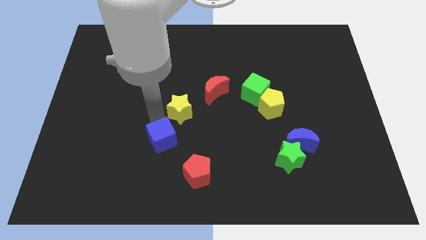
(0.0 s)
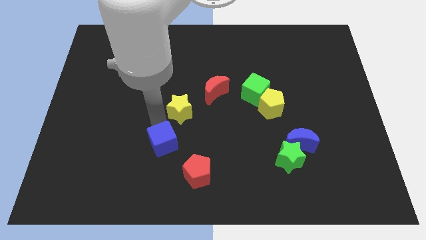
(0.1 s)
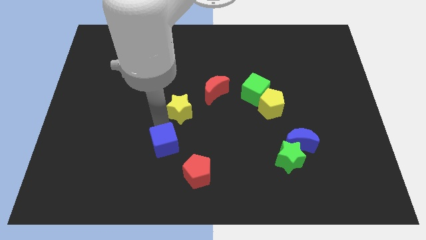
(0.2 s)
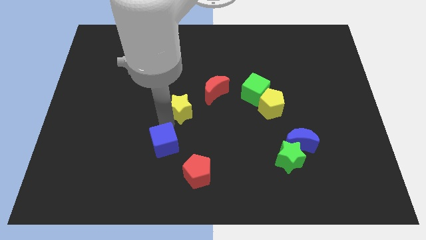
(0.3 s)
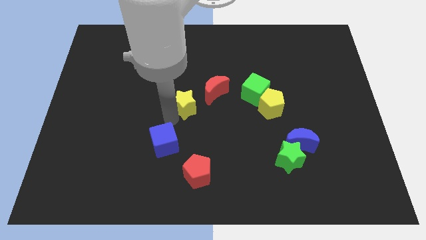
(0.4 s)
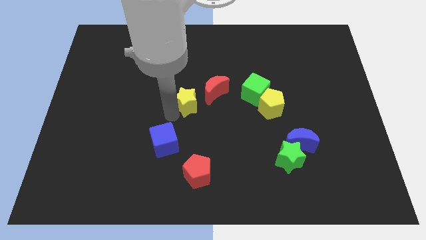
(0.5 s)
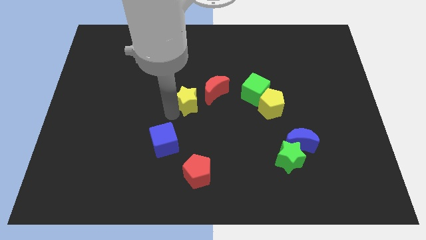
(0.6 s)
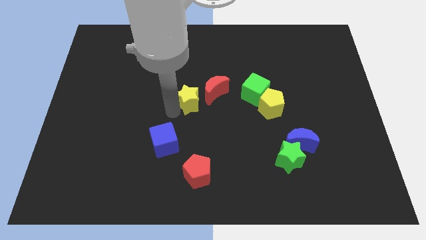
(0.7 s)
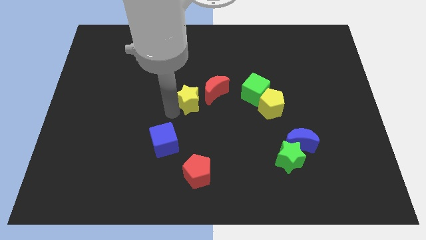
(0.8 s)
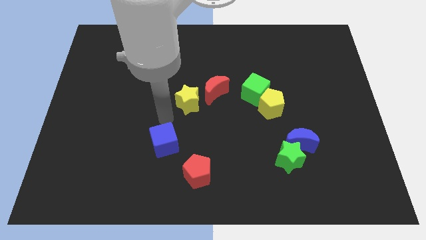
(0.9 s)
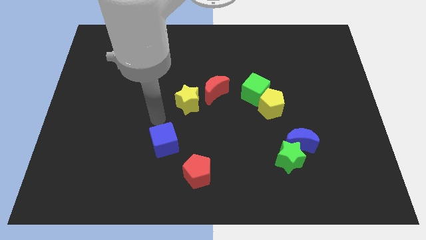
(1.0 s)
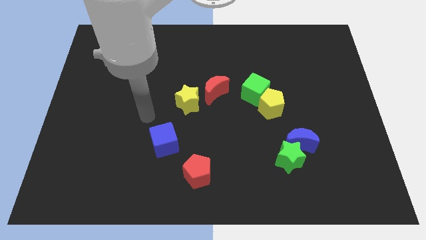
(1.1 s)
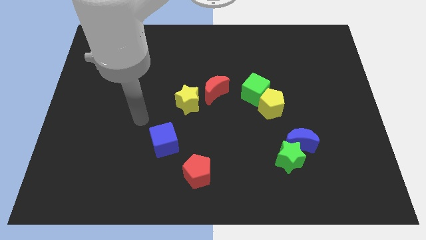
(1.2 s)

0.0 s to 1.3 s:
push the yellow star into the red crescent

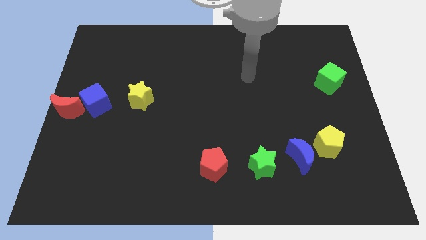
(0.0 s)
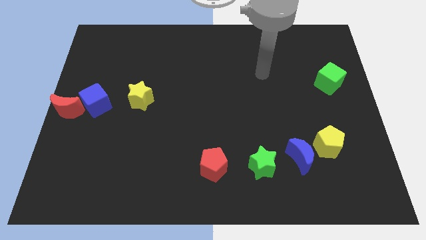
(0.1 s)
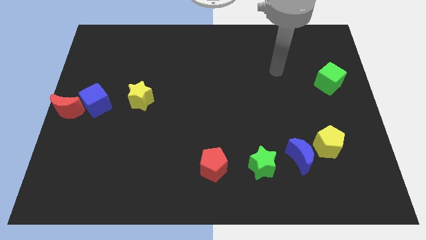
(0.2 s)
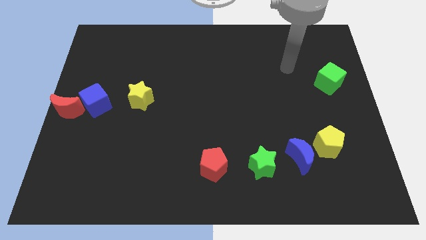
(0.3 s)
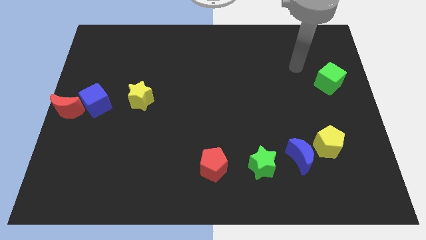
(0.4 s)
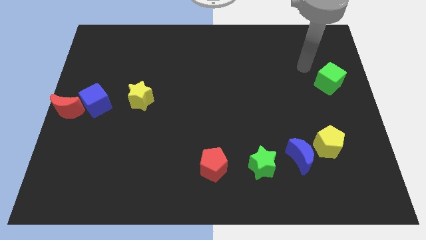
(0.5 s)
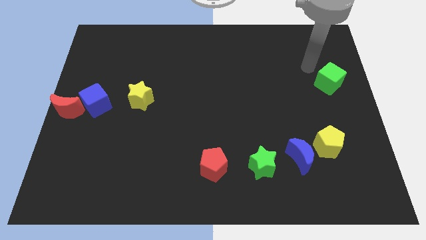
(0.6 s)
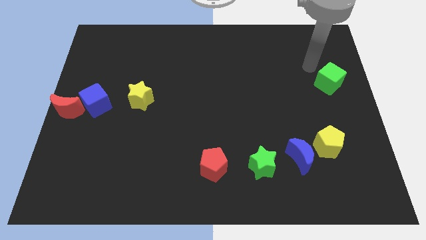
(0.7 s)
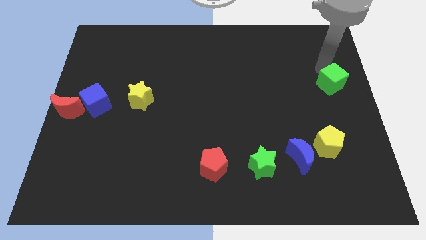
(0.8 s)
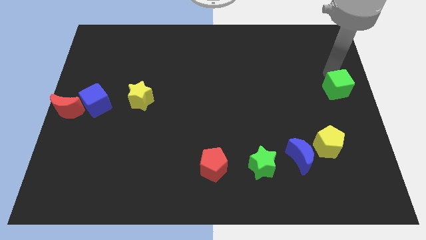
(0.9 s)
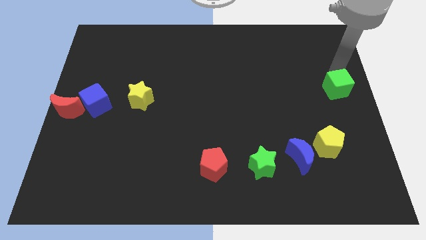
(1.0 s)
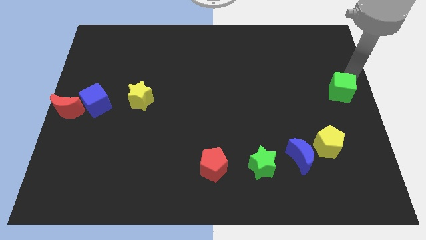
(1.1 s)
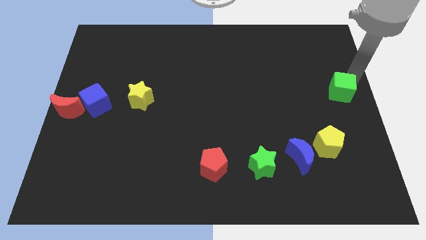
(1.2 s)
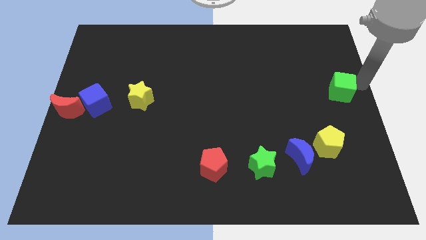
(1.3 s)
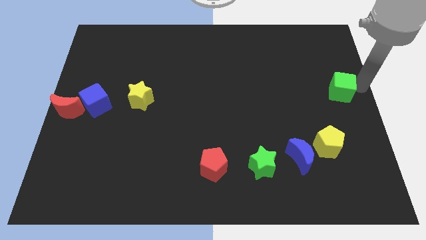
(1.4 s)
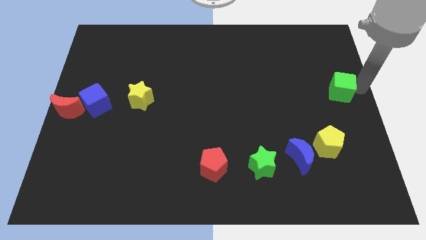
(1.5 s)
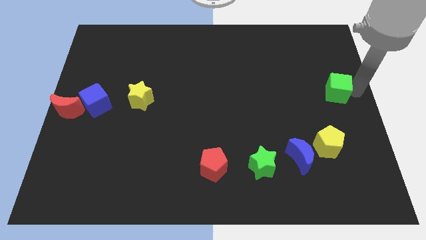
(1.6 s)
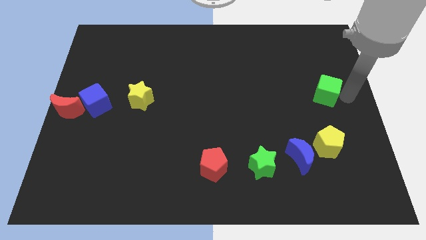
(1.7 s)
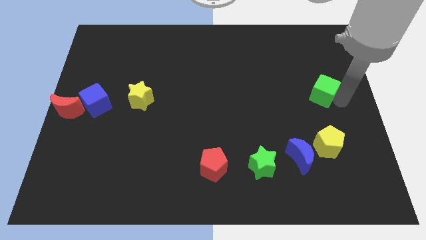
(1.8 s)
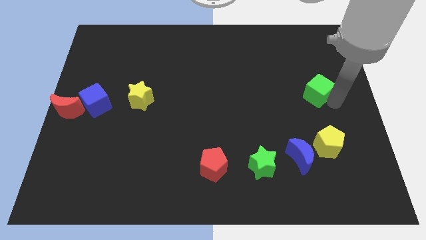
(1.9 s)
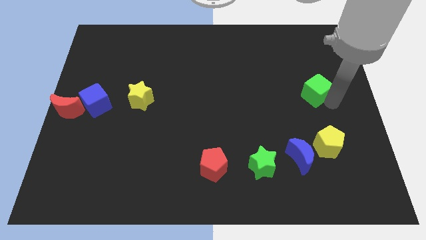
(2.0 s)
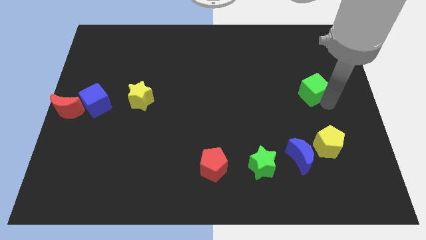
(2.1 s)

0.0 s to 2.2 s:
put green cube vertical to yellow pentagon

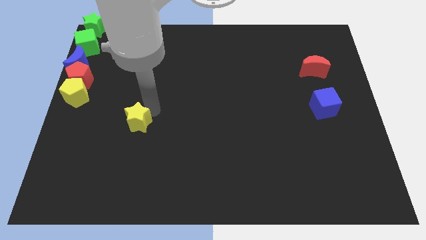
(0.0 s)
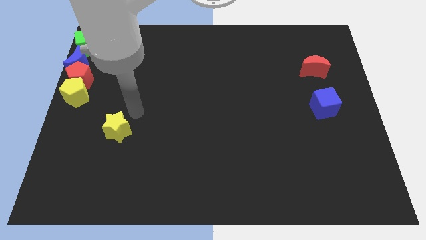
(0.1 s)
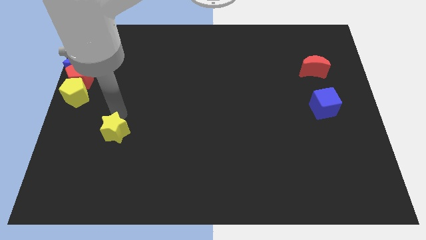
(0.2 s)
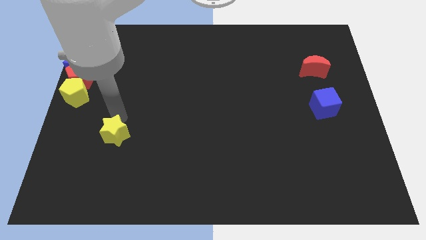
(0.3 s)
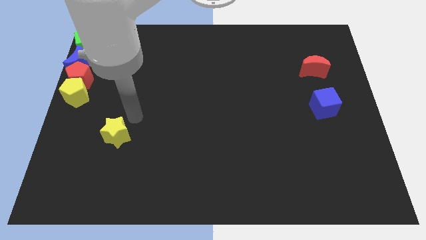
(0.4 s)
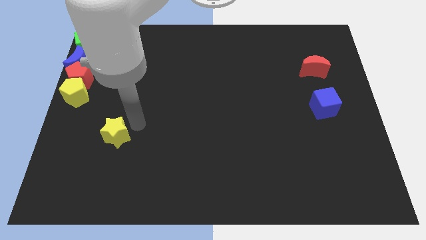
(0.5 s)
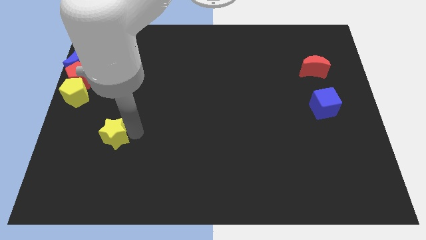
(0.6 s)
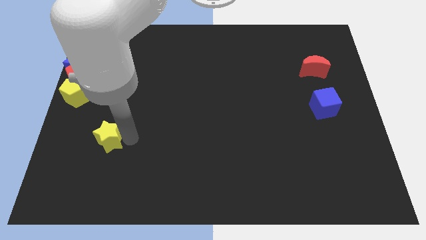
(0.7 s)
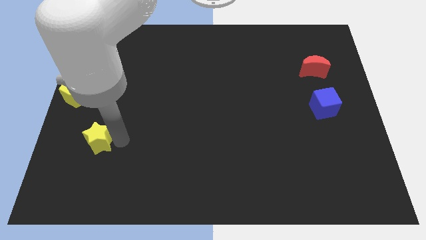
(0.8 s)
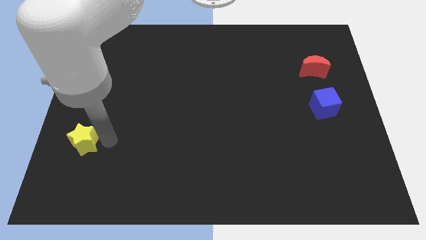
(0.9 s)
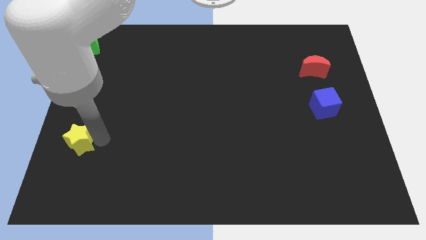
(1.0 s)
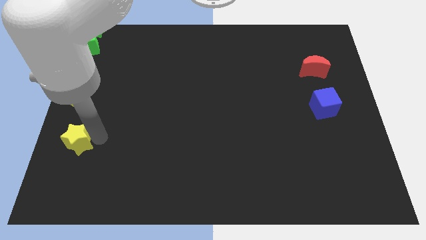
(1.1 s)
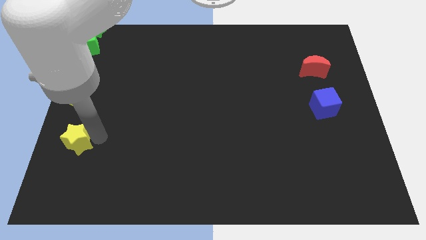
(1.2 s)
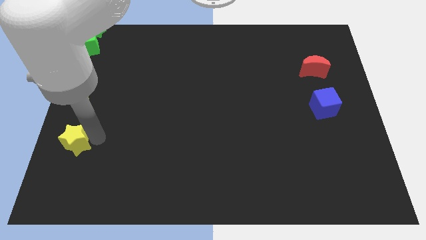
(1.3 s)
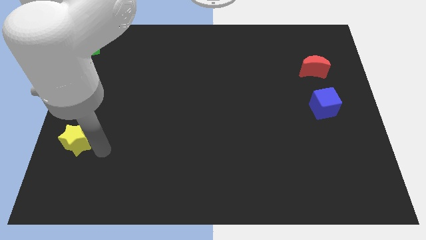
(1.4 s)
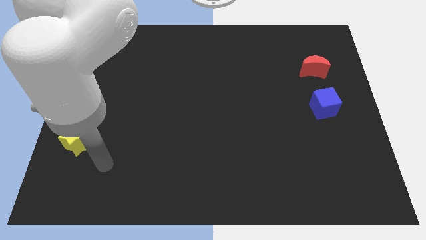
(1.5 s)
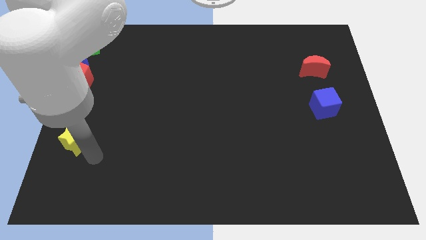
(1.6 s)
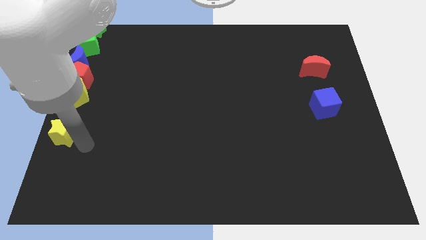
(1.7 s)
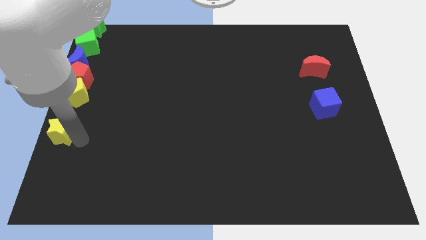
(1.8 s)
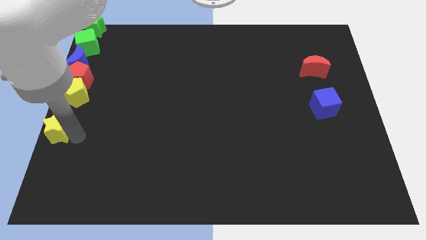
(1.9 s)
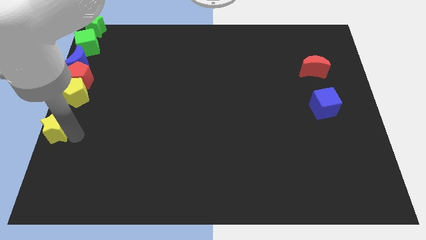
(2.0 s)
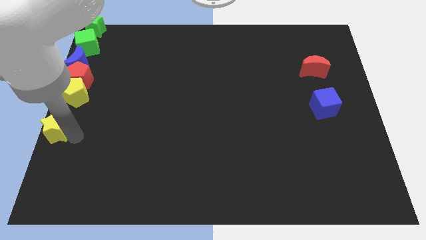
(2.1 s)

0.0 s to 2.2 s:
place the yellow star under the yellow pentagon

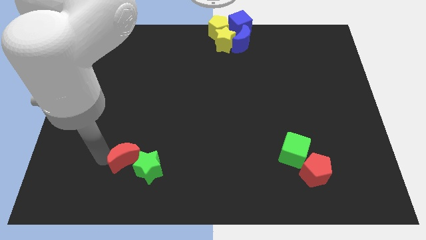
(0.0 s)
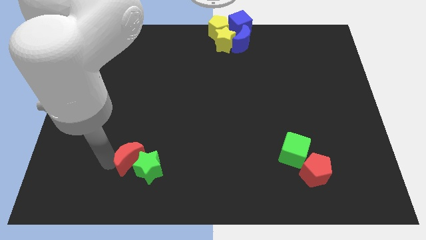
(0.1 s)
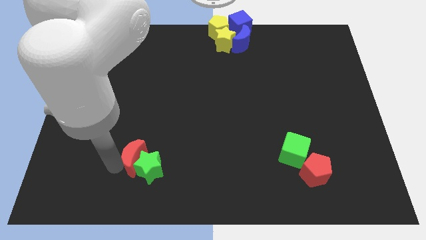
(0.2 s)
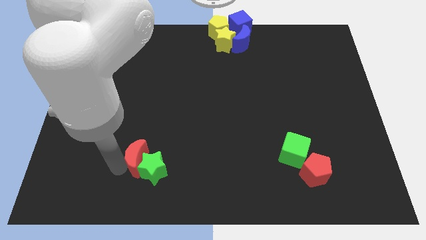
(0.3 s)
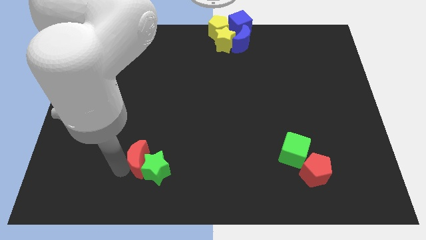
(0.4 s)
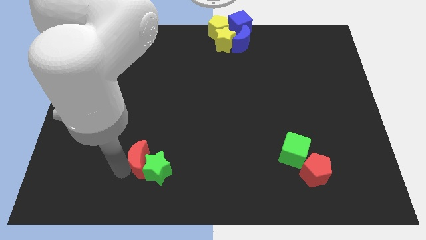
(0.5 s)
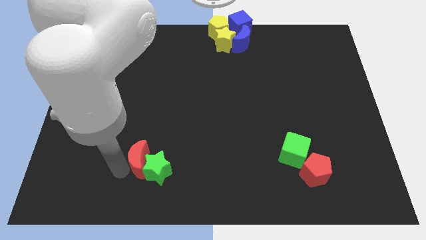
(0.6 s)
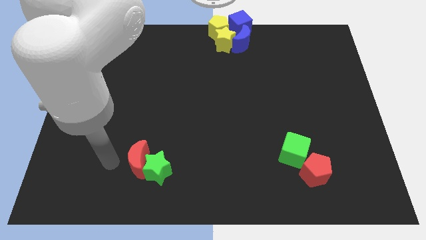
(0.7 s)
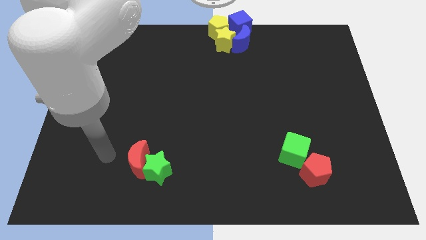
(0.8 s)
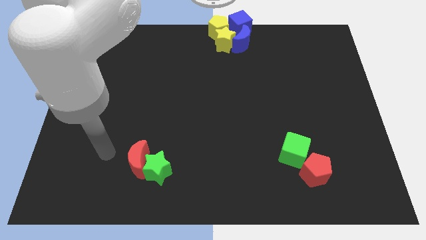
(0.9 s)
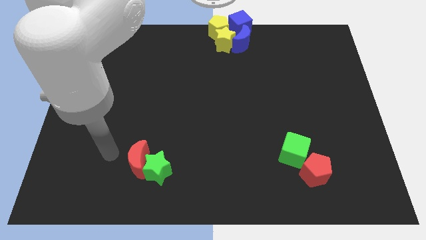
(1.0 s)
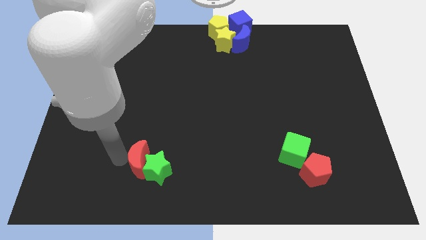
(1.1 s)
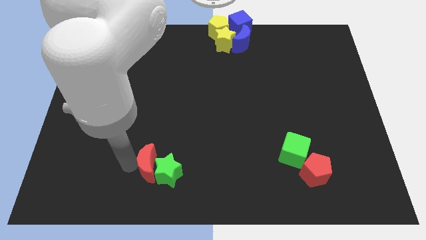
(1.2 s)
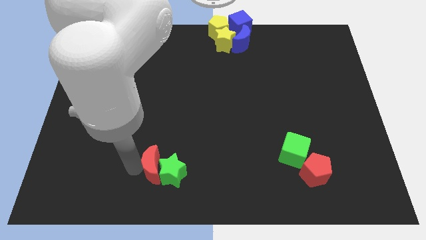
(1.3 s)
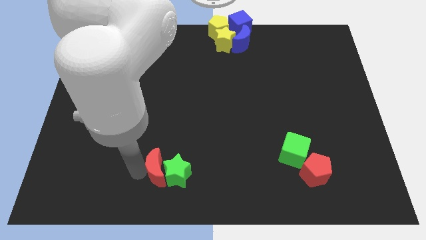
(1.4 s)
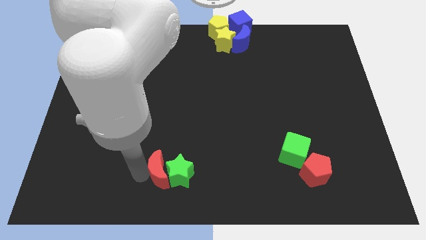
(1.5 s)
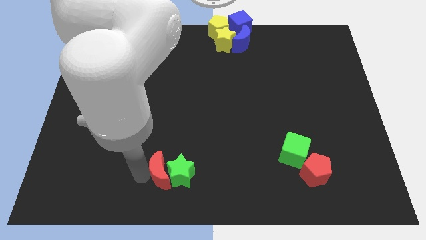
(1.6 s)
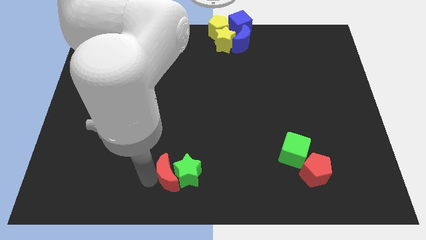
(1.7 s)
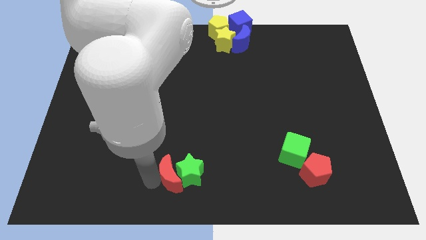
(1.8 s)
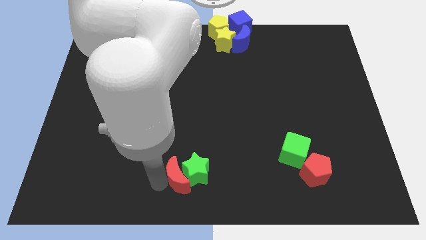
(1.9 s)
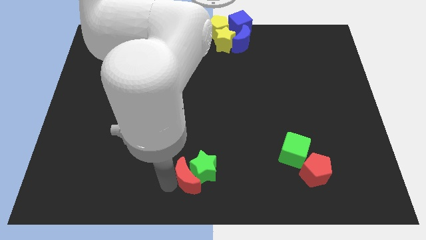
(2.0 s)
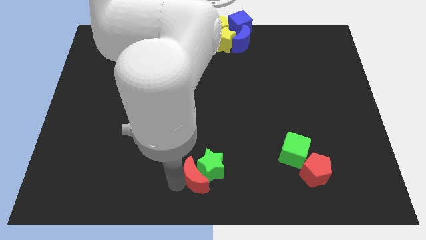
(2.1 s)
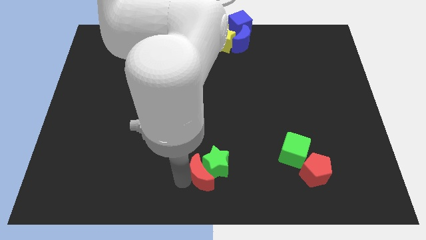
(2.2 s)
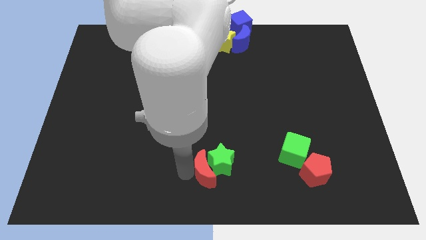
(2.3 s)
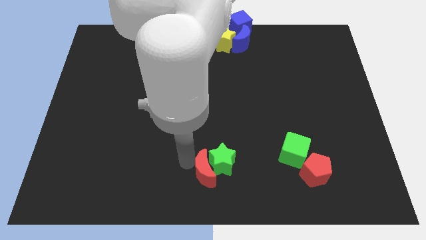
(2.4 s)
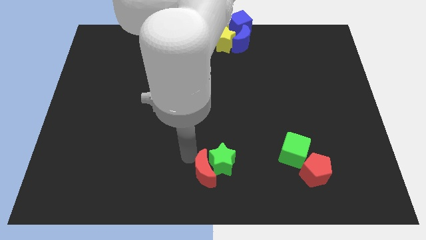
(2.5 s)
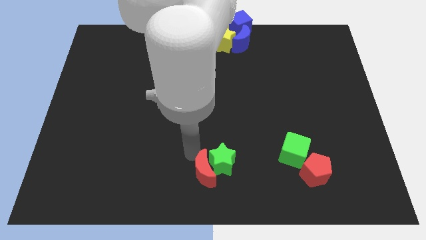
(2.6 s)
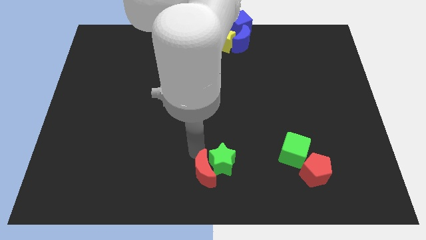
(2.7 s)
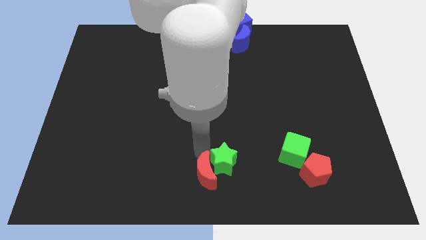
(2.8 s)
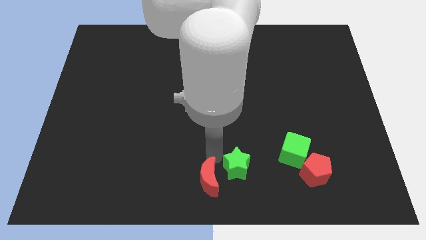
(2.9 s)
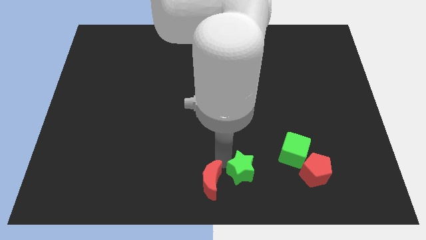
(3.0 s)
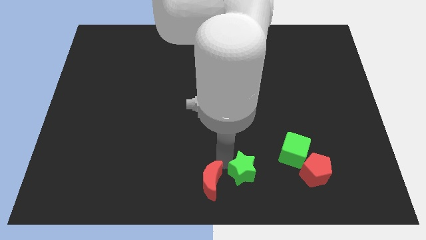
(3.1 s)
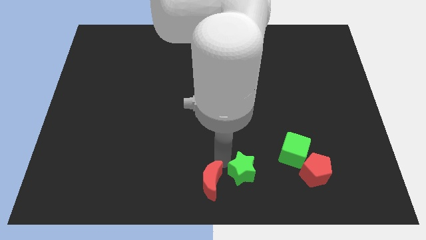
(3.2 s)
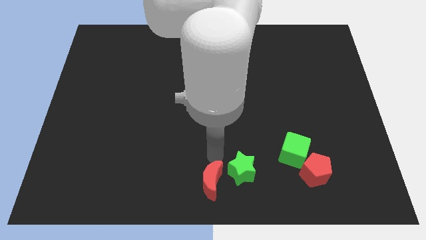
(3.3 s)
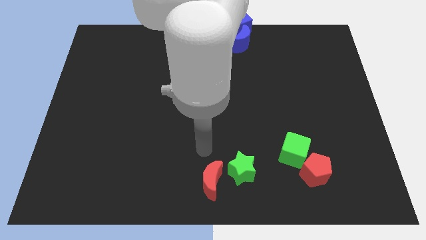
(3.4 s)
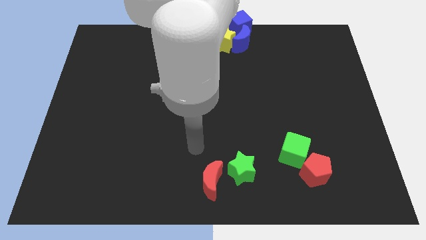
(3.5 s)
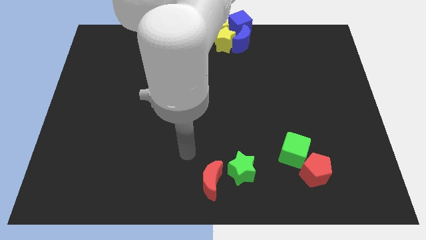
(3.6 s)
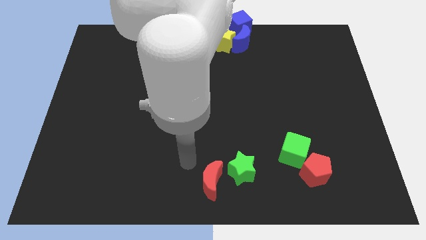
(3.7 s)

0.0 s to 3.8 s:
move the red crescent and green star towards bottem right
